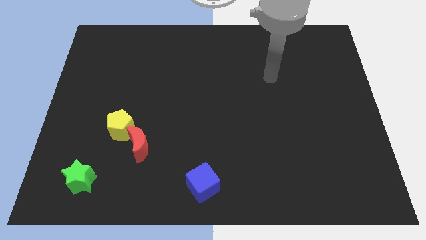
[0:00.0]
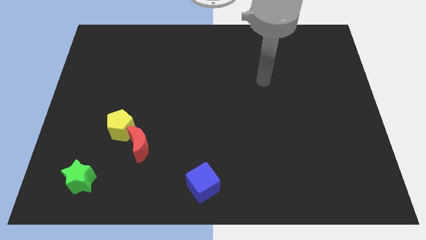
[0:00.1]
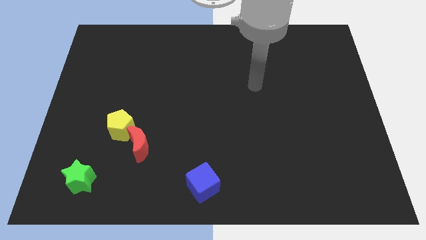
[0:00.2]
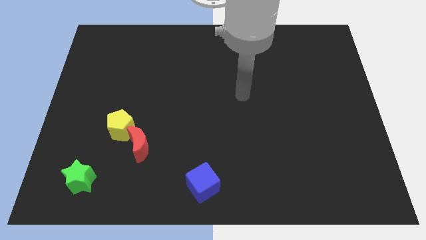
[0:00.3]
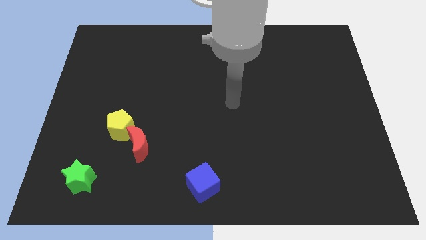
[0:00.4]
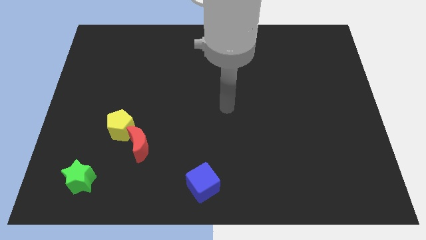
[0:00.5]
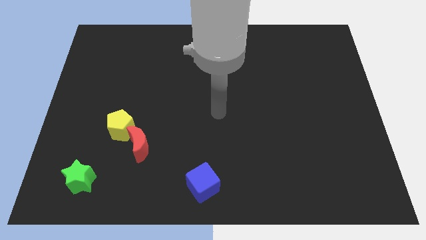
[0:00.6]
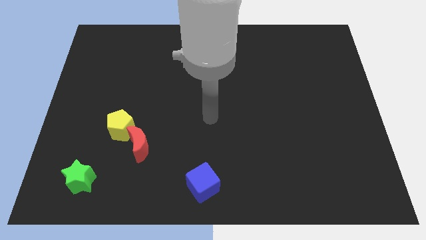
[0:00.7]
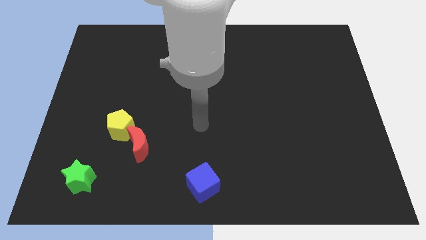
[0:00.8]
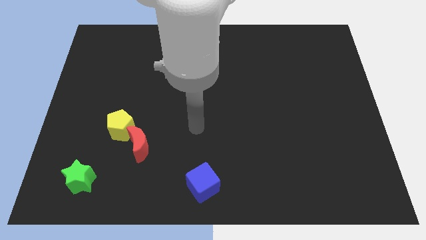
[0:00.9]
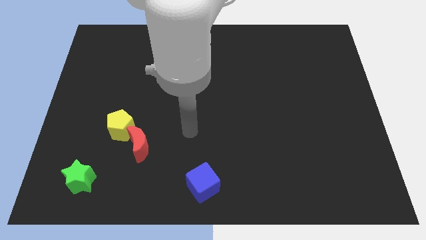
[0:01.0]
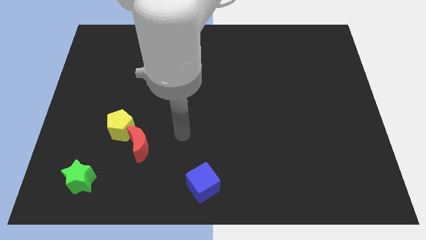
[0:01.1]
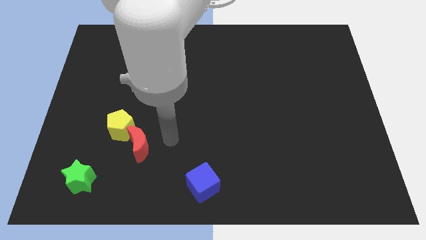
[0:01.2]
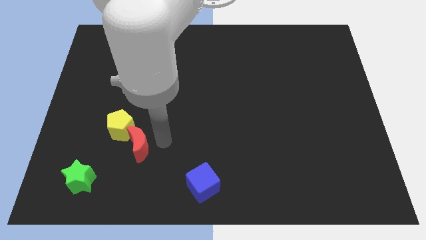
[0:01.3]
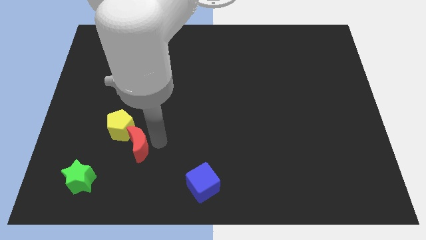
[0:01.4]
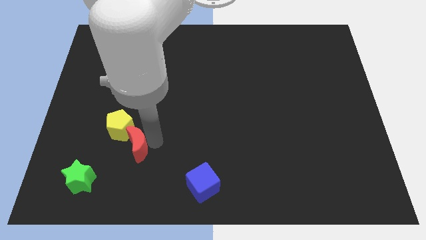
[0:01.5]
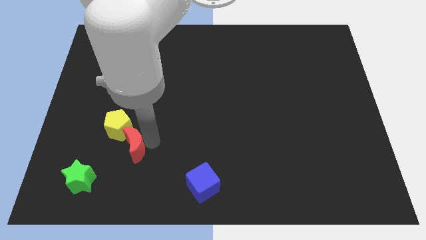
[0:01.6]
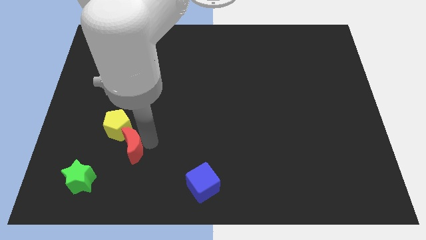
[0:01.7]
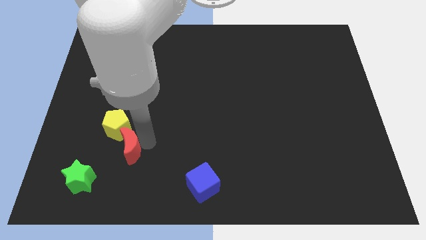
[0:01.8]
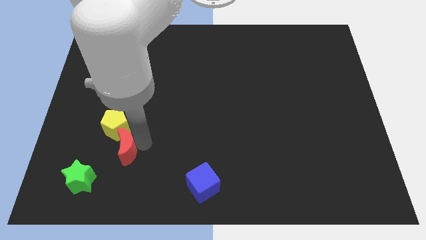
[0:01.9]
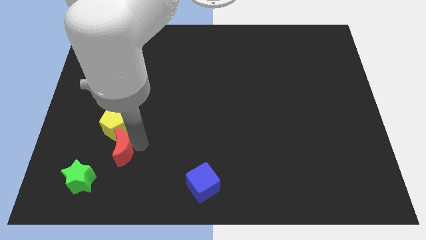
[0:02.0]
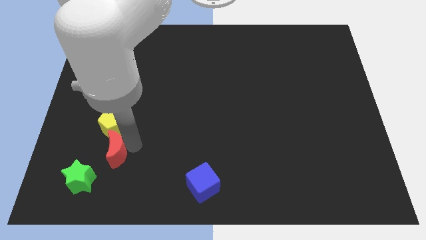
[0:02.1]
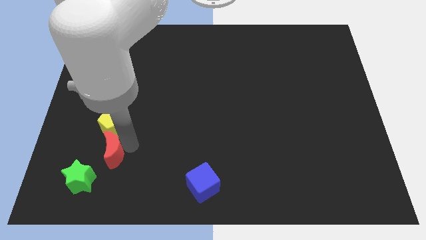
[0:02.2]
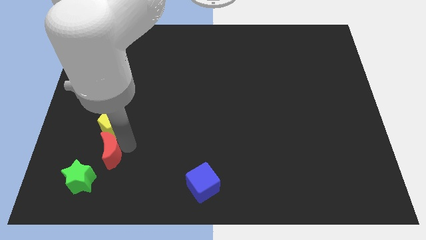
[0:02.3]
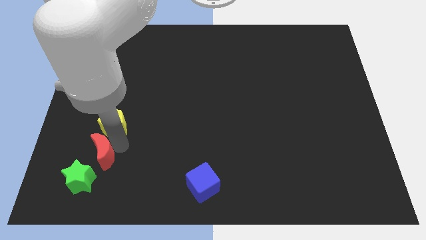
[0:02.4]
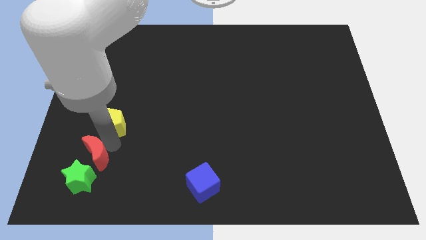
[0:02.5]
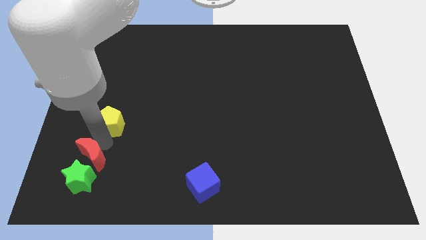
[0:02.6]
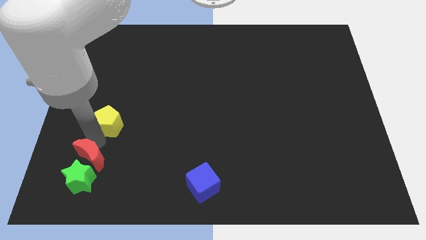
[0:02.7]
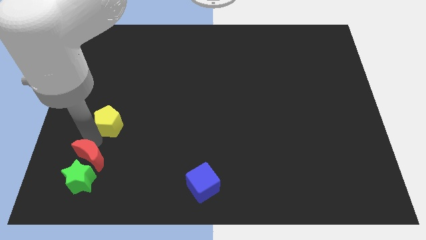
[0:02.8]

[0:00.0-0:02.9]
push the moon to the green star

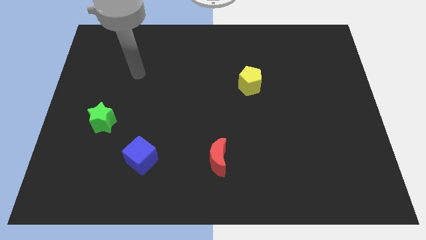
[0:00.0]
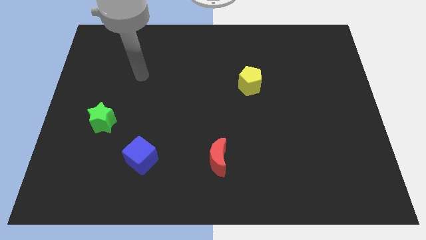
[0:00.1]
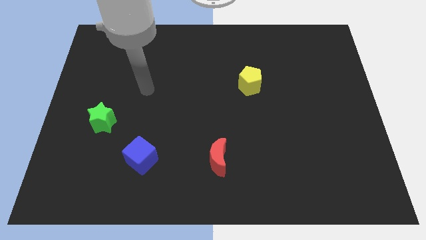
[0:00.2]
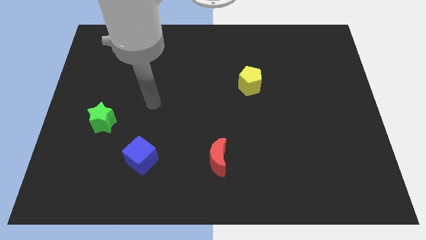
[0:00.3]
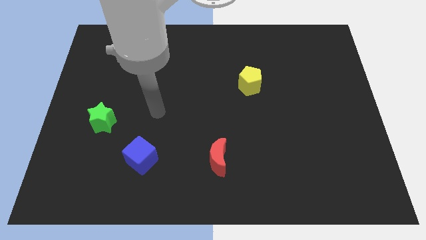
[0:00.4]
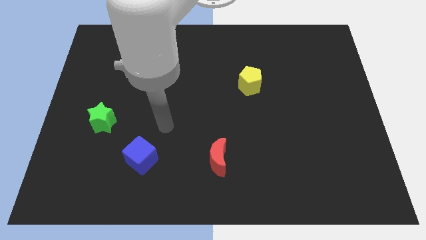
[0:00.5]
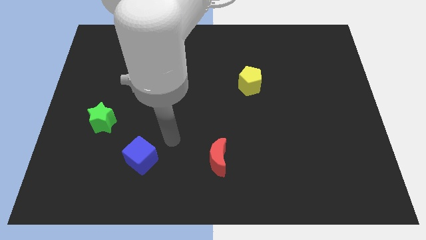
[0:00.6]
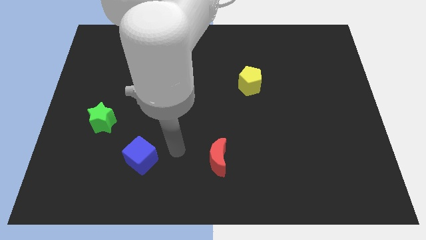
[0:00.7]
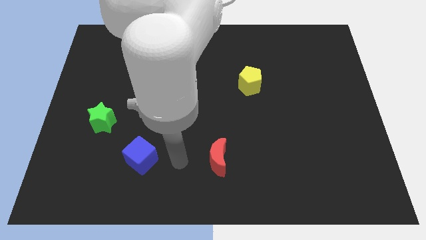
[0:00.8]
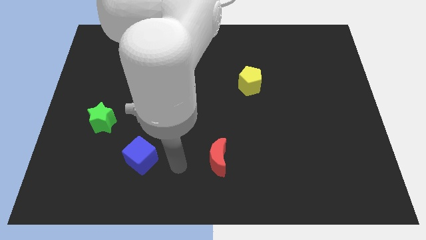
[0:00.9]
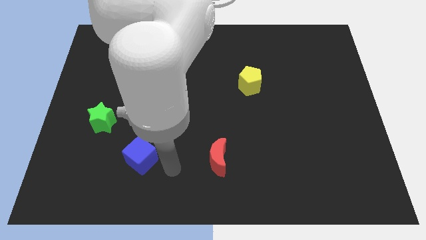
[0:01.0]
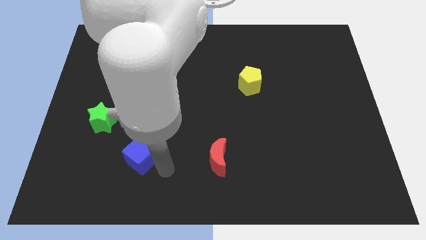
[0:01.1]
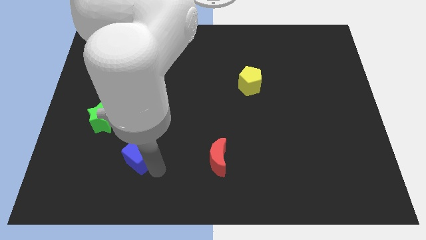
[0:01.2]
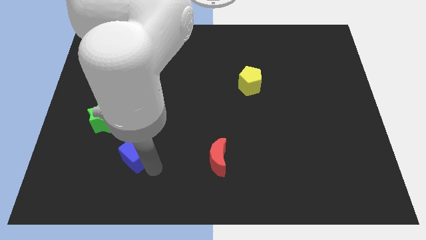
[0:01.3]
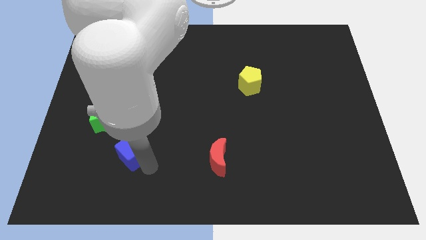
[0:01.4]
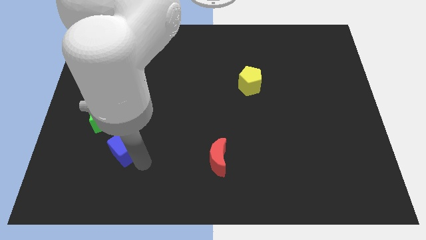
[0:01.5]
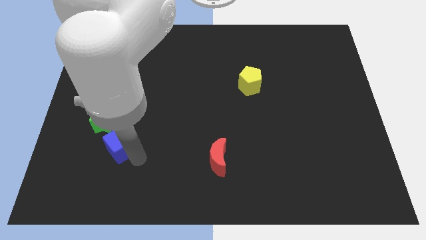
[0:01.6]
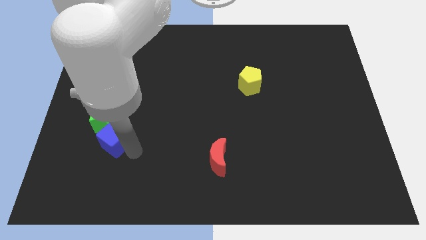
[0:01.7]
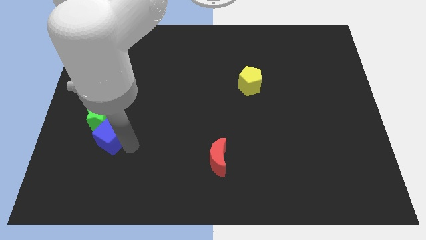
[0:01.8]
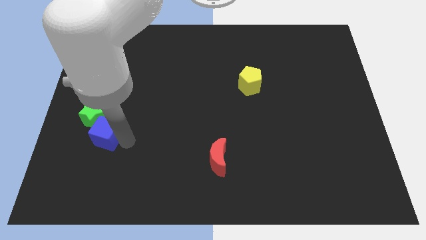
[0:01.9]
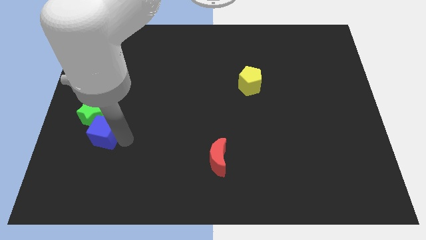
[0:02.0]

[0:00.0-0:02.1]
slide the blue cube close to the green block

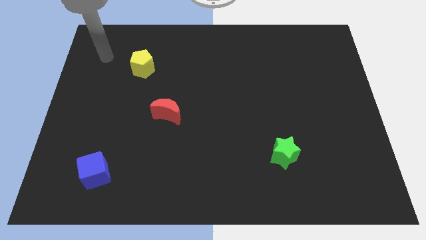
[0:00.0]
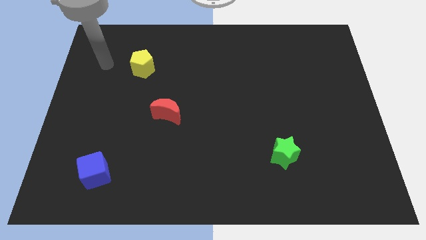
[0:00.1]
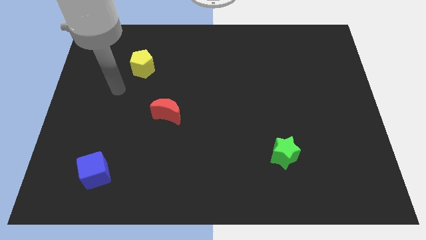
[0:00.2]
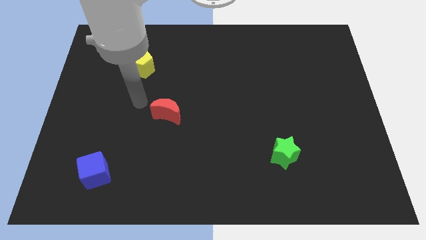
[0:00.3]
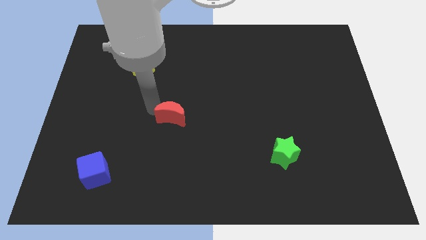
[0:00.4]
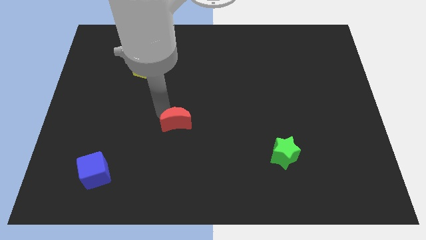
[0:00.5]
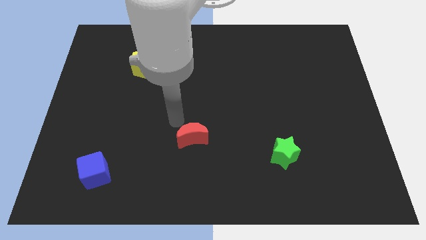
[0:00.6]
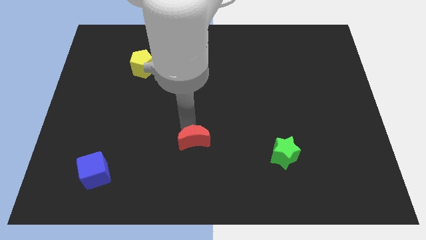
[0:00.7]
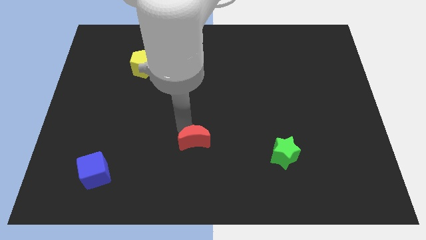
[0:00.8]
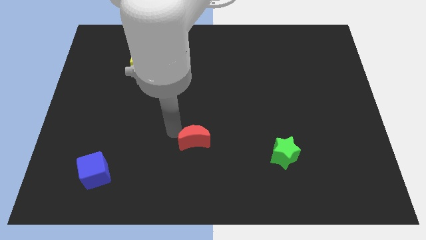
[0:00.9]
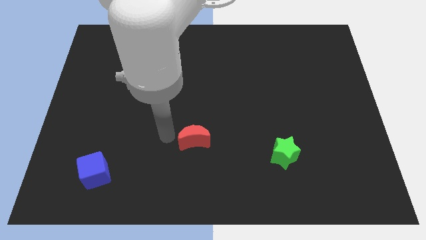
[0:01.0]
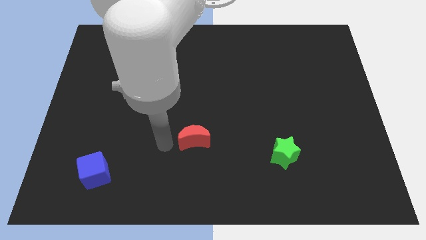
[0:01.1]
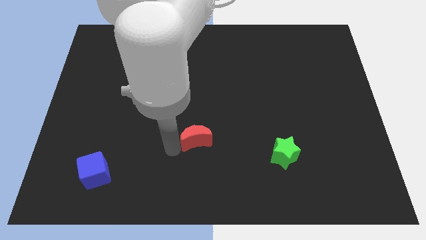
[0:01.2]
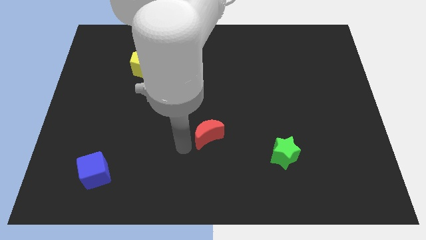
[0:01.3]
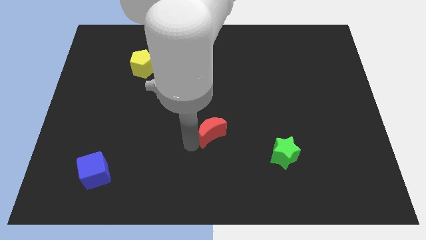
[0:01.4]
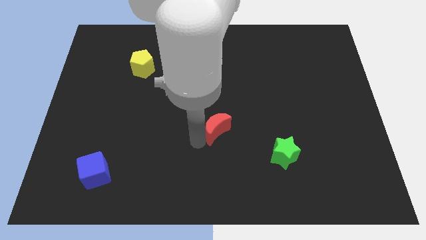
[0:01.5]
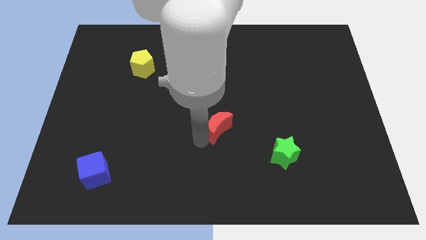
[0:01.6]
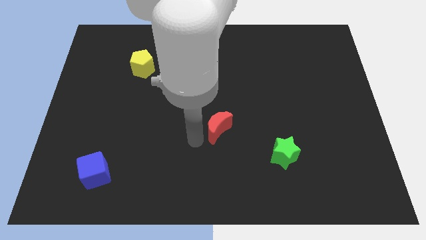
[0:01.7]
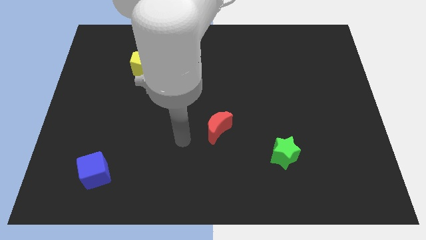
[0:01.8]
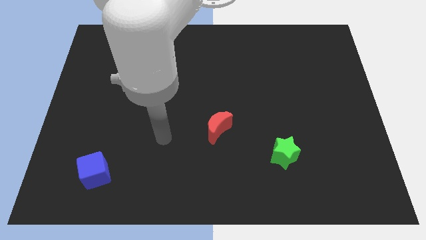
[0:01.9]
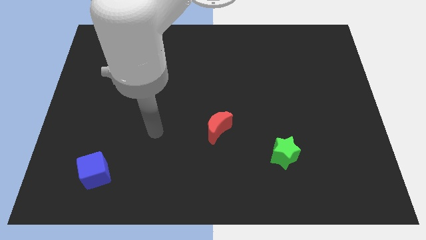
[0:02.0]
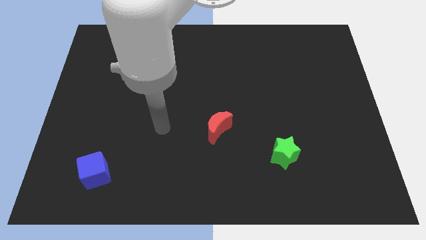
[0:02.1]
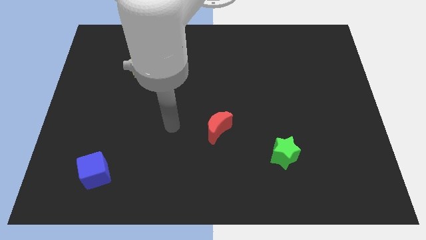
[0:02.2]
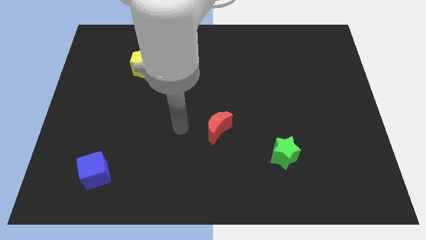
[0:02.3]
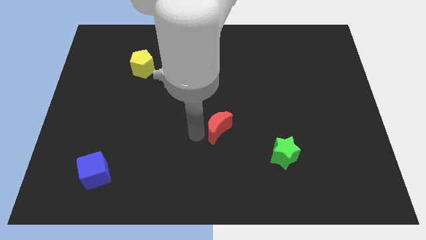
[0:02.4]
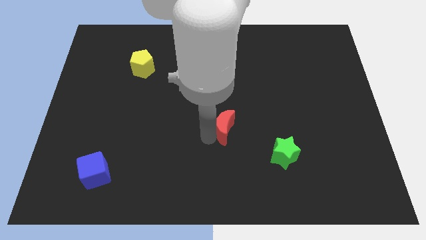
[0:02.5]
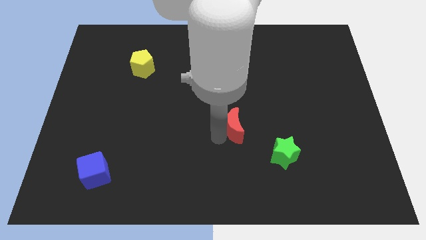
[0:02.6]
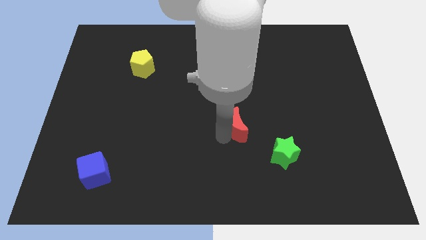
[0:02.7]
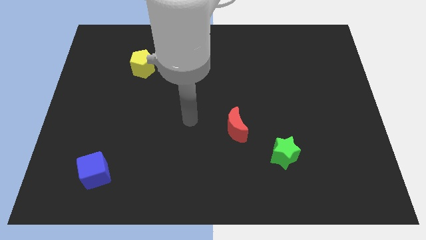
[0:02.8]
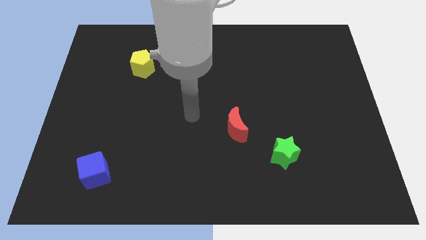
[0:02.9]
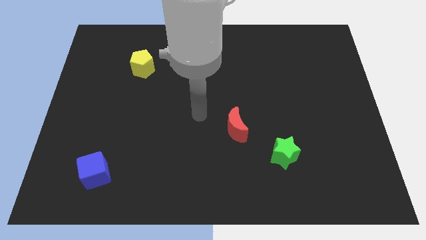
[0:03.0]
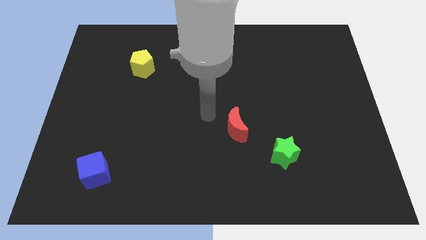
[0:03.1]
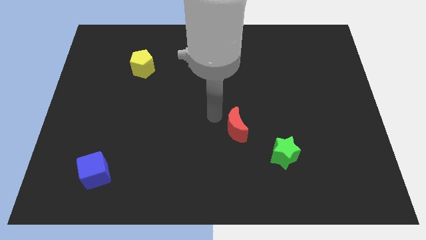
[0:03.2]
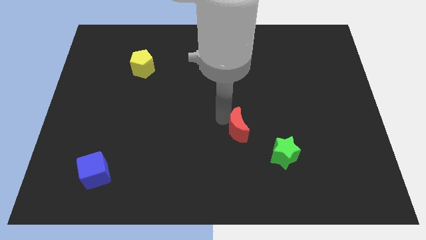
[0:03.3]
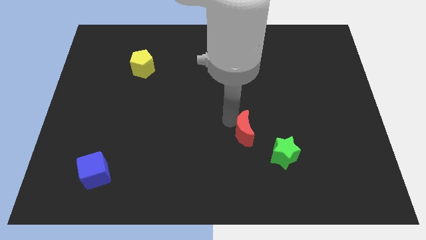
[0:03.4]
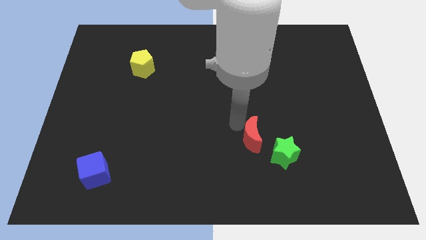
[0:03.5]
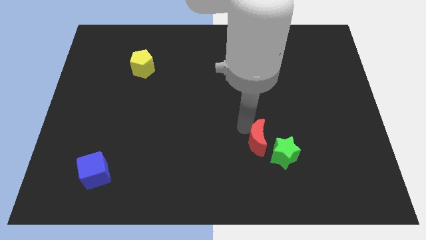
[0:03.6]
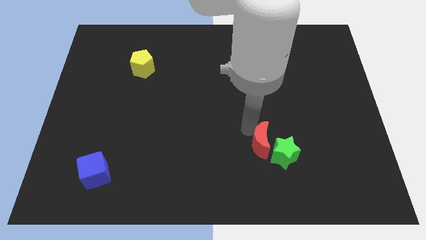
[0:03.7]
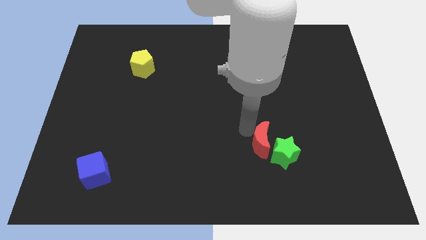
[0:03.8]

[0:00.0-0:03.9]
push the red moon towards the green block
